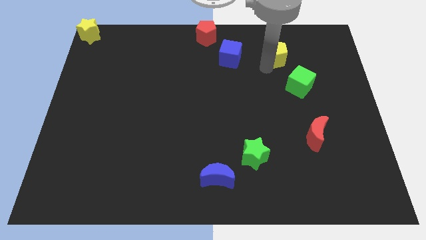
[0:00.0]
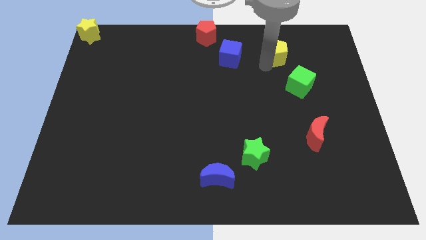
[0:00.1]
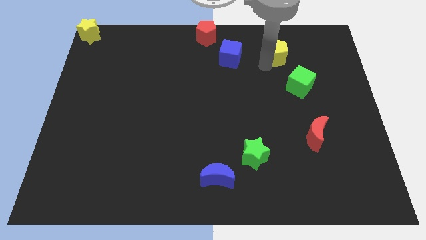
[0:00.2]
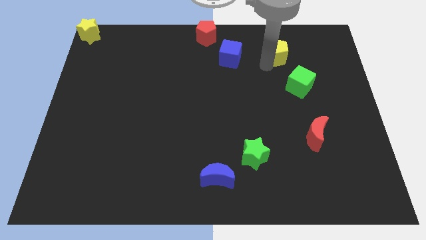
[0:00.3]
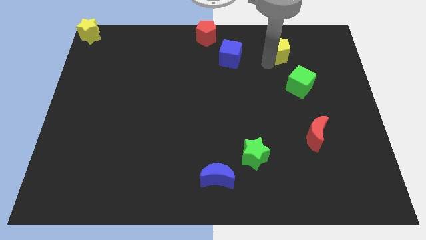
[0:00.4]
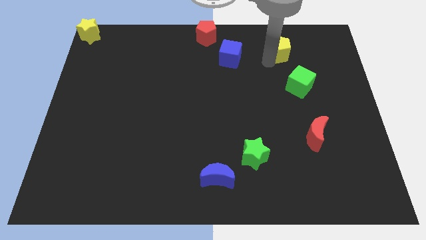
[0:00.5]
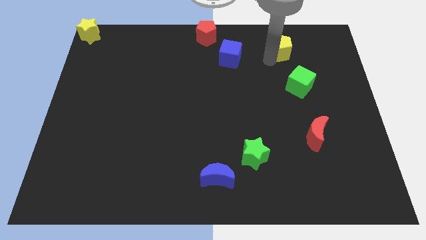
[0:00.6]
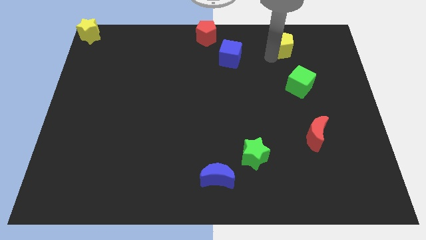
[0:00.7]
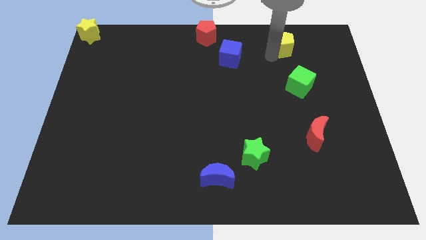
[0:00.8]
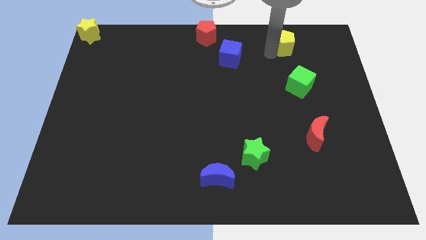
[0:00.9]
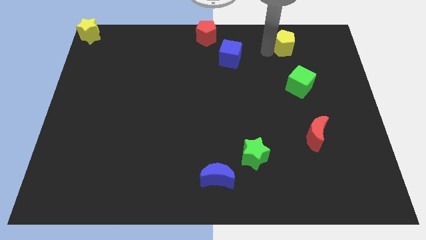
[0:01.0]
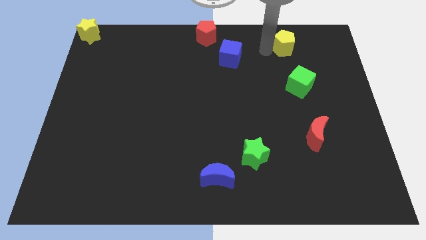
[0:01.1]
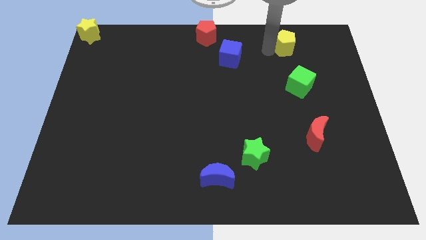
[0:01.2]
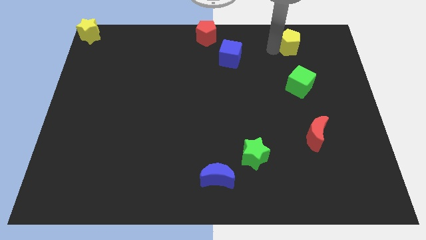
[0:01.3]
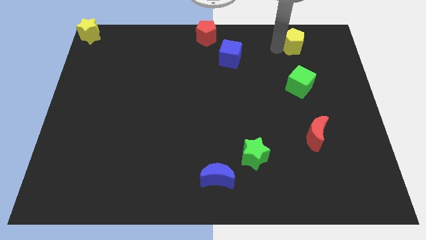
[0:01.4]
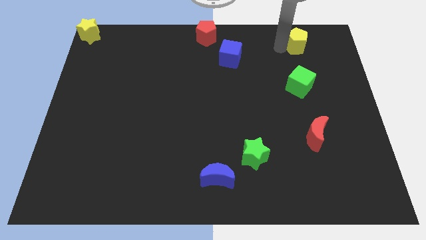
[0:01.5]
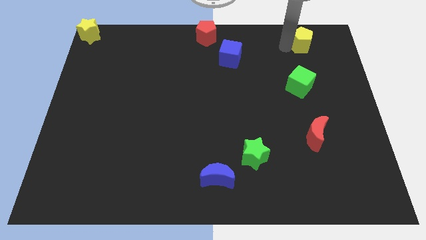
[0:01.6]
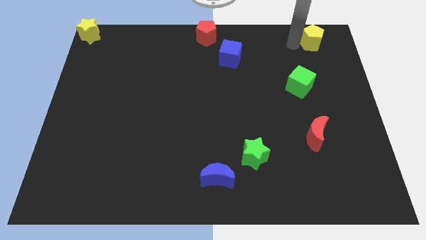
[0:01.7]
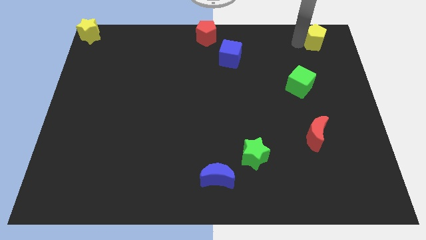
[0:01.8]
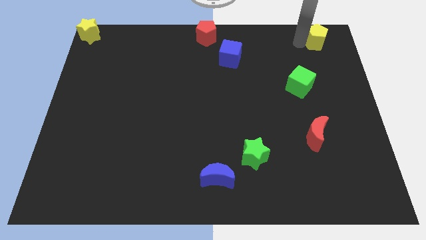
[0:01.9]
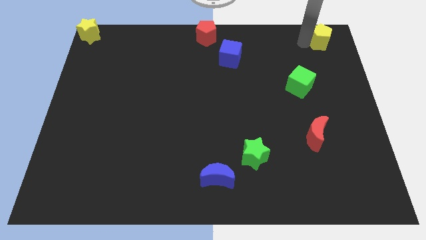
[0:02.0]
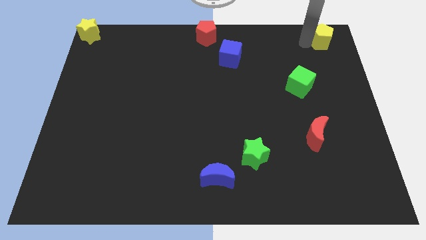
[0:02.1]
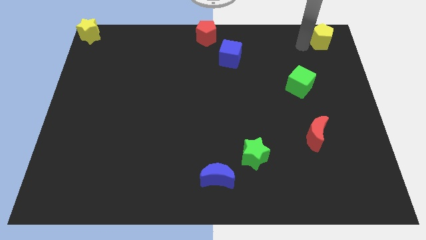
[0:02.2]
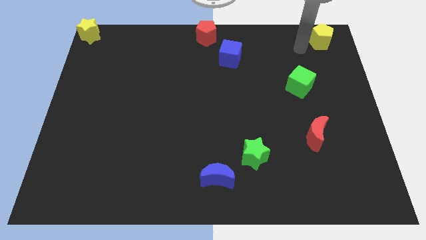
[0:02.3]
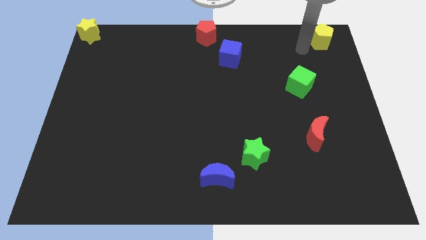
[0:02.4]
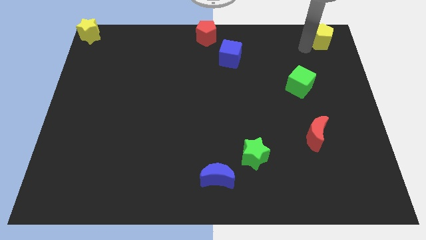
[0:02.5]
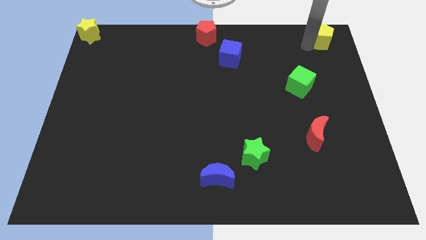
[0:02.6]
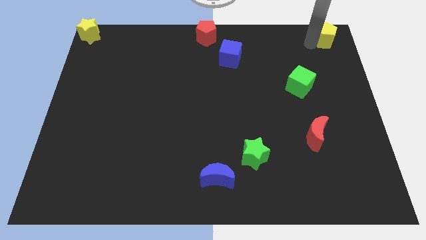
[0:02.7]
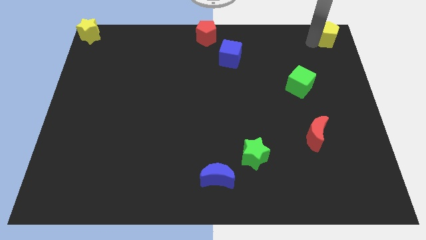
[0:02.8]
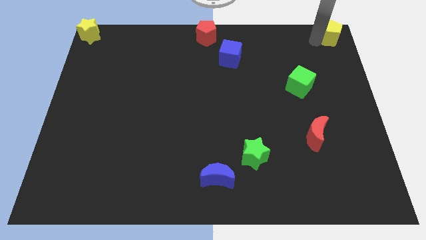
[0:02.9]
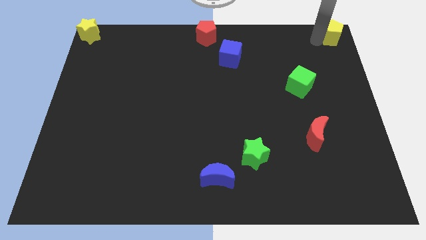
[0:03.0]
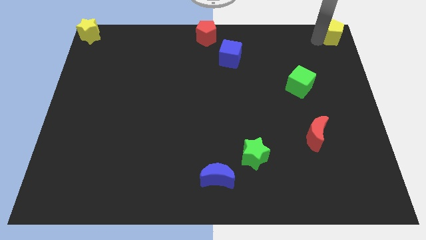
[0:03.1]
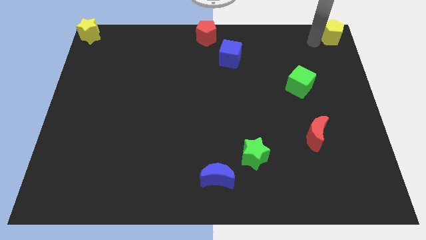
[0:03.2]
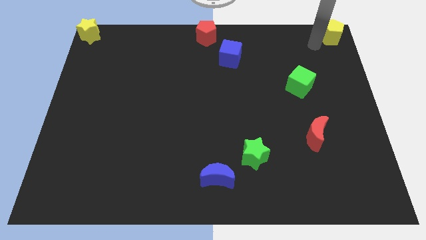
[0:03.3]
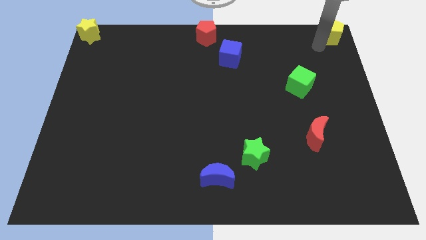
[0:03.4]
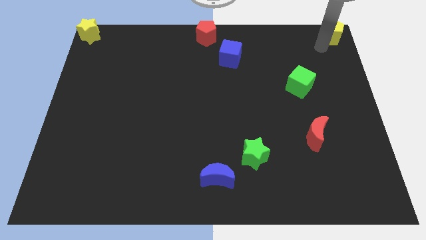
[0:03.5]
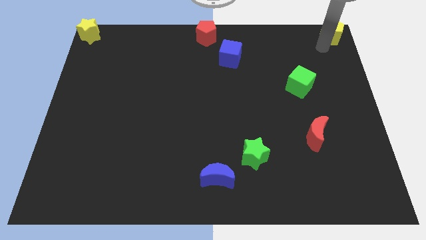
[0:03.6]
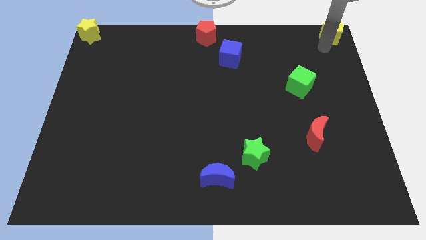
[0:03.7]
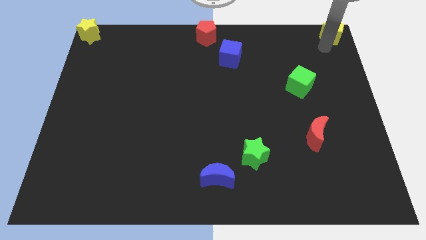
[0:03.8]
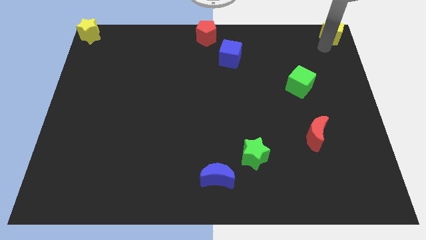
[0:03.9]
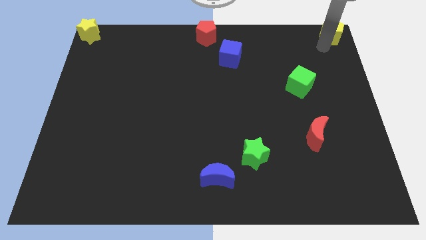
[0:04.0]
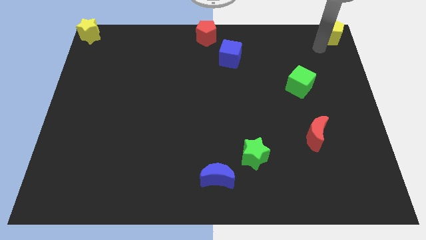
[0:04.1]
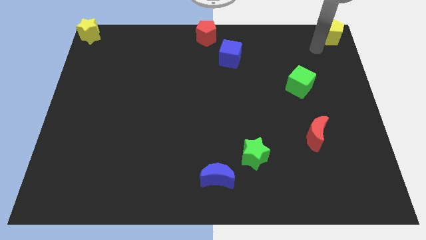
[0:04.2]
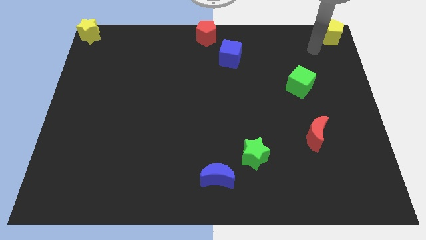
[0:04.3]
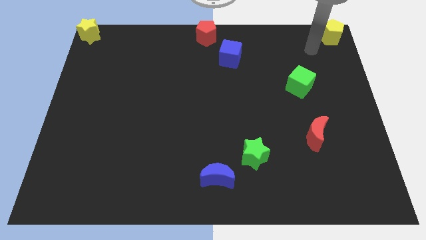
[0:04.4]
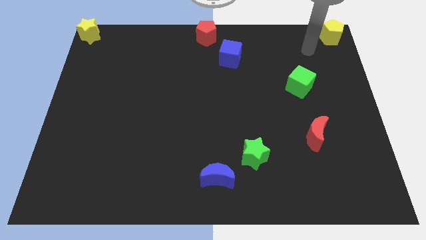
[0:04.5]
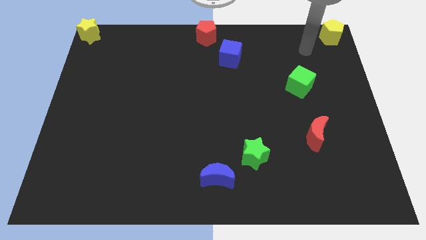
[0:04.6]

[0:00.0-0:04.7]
push the yellow pentagon to the top right

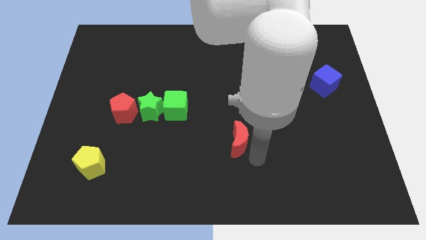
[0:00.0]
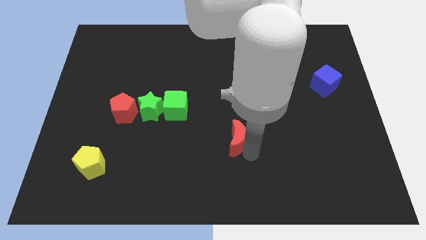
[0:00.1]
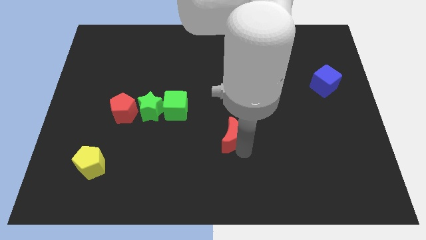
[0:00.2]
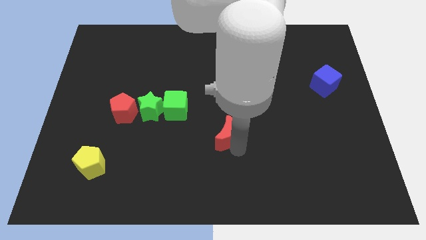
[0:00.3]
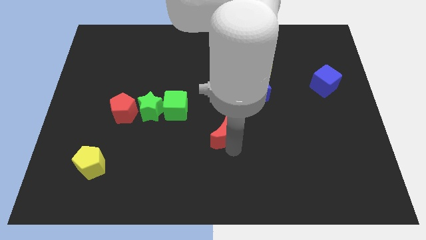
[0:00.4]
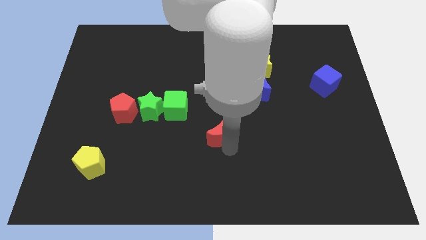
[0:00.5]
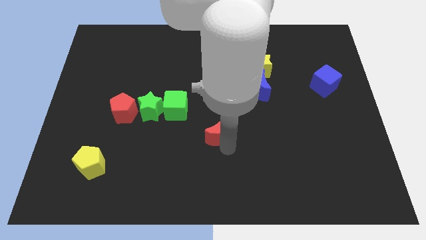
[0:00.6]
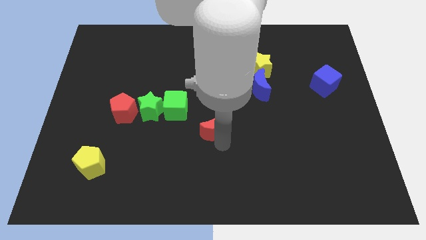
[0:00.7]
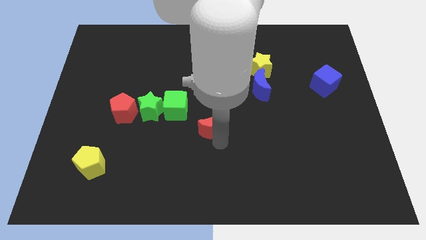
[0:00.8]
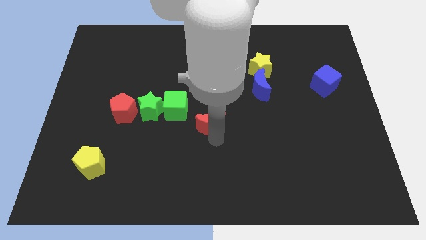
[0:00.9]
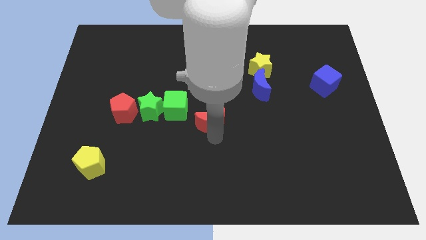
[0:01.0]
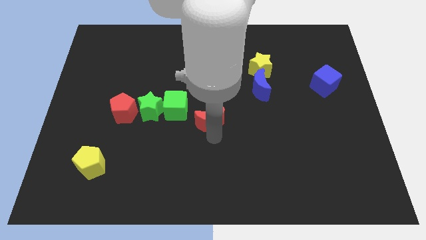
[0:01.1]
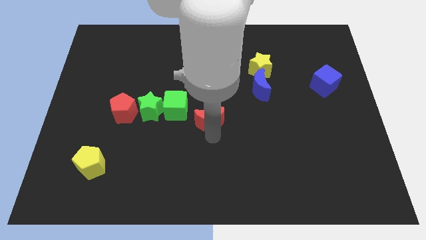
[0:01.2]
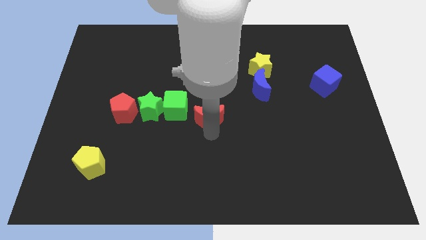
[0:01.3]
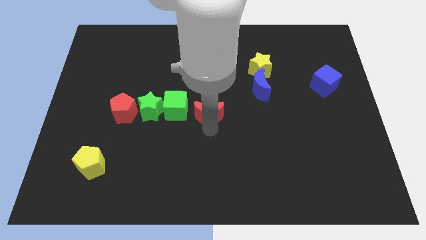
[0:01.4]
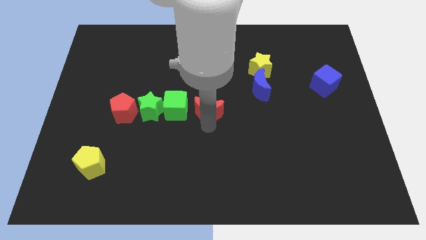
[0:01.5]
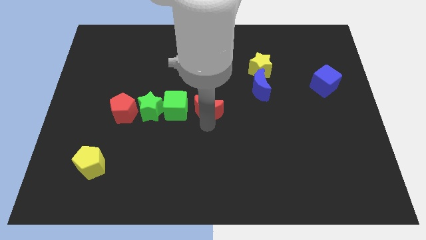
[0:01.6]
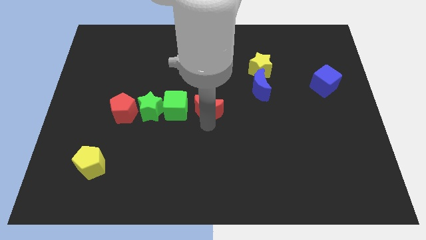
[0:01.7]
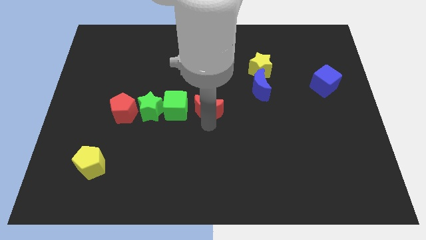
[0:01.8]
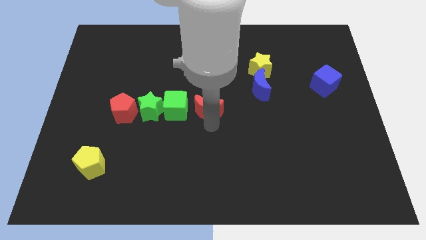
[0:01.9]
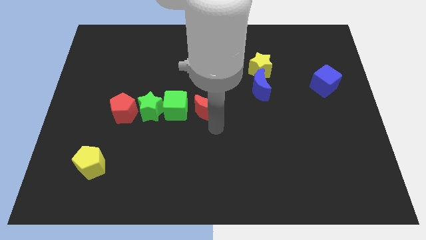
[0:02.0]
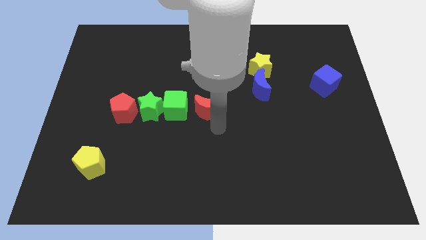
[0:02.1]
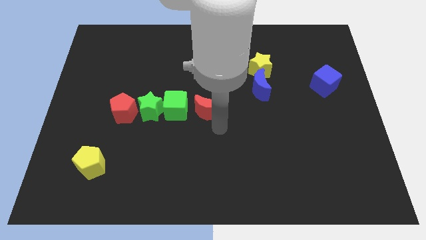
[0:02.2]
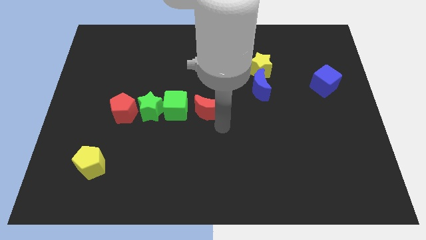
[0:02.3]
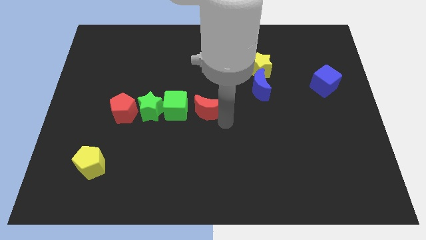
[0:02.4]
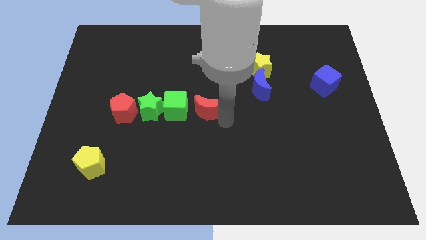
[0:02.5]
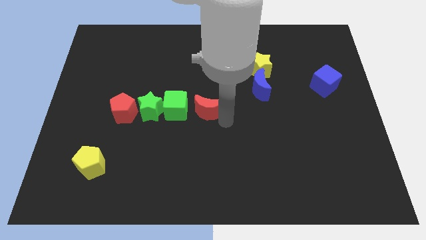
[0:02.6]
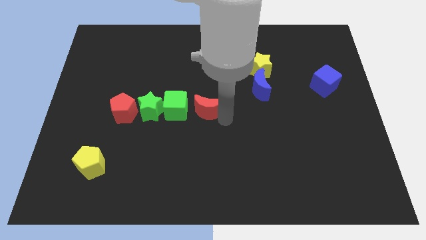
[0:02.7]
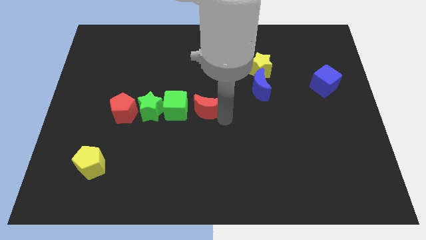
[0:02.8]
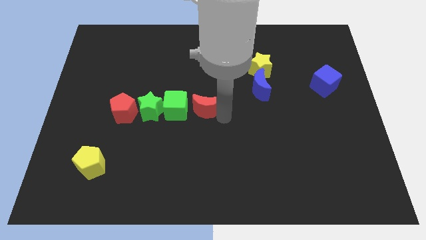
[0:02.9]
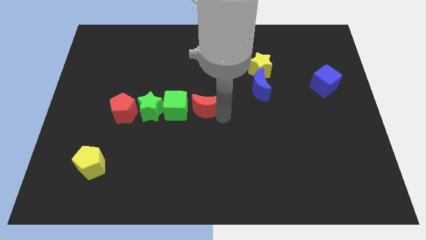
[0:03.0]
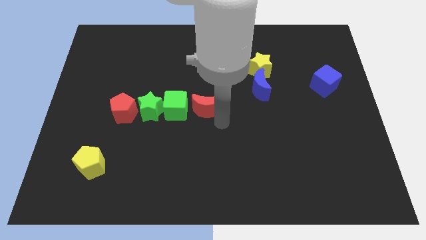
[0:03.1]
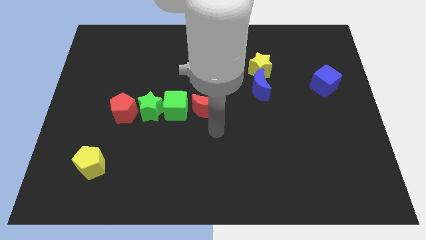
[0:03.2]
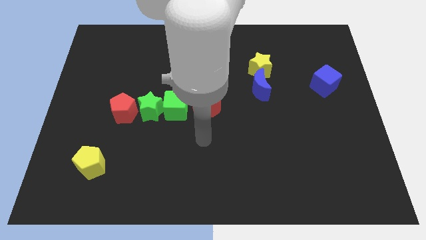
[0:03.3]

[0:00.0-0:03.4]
place red moon to the right of green cube

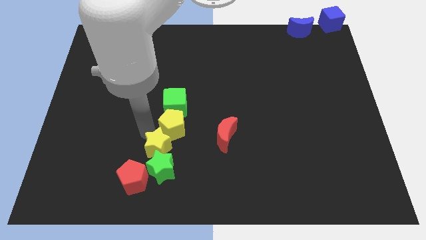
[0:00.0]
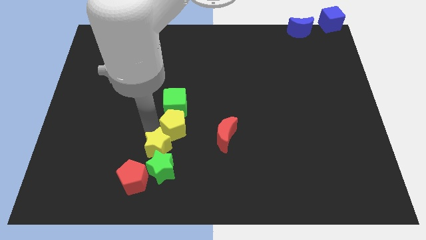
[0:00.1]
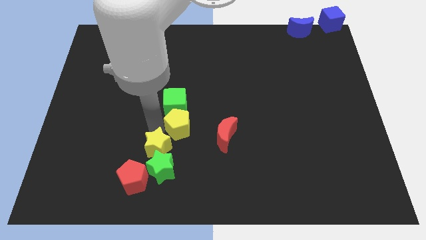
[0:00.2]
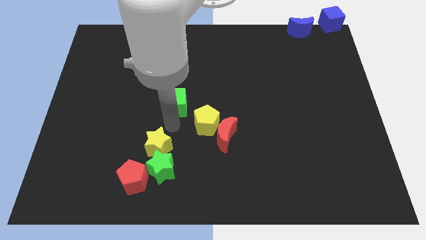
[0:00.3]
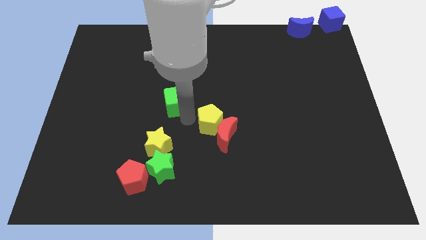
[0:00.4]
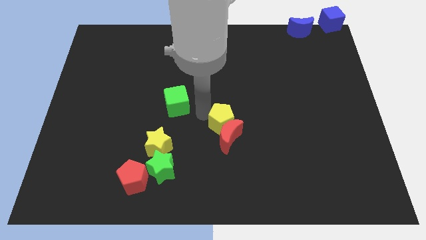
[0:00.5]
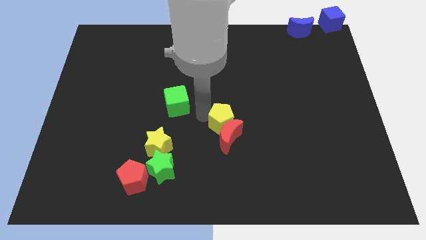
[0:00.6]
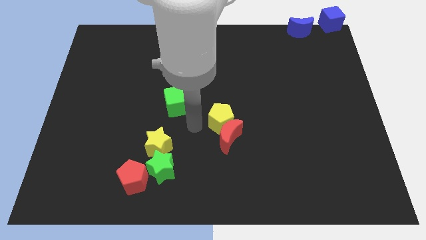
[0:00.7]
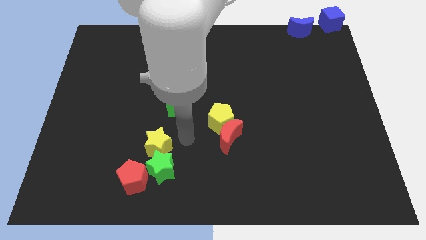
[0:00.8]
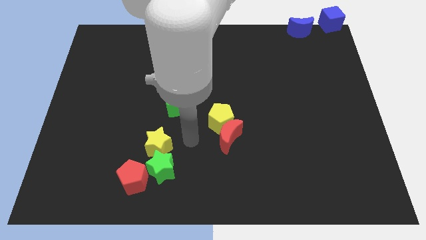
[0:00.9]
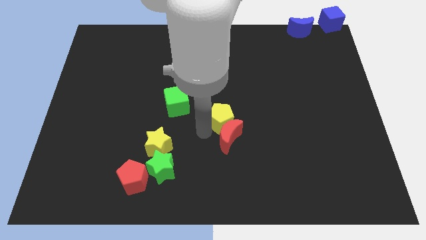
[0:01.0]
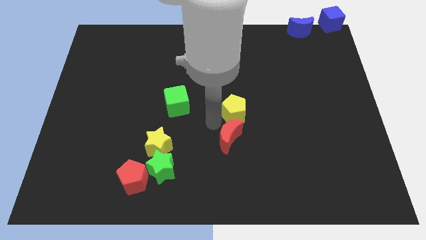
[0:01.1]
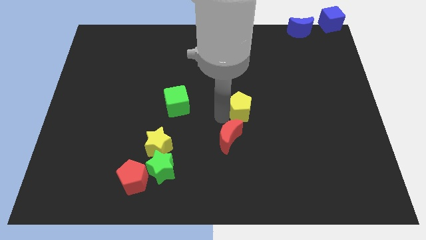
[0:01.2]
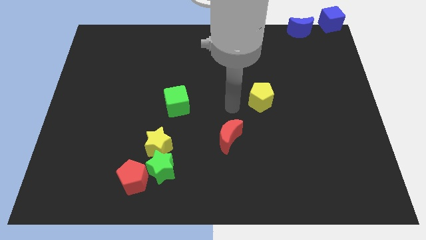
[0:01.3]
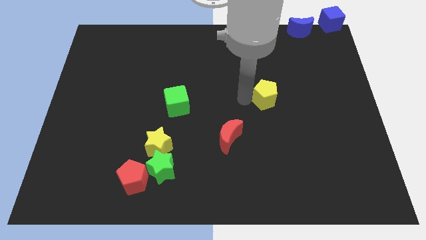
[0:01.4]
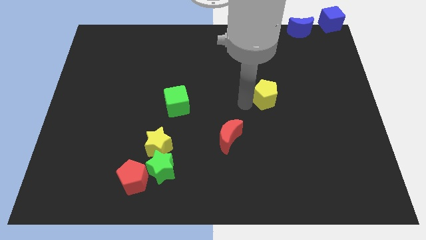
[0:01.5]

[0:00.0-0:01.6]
push the yellow pentagon to the right of the green cube
